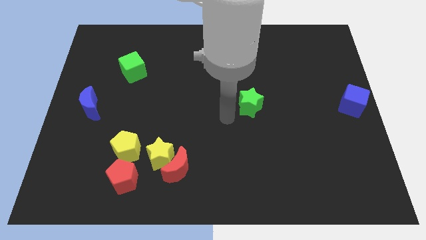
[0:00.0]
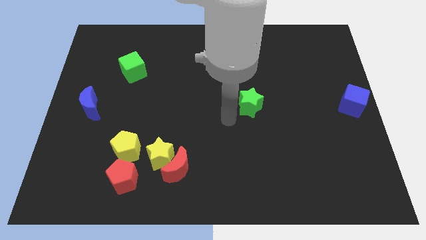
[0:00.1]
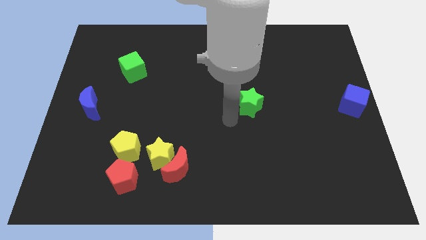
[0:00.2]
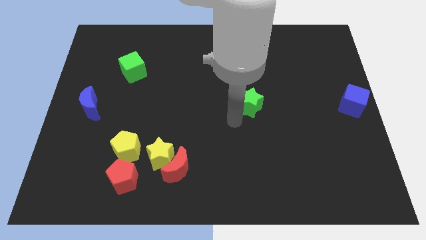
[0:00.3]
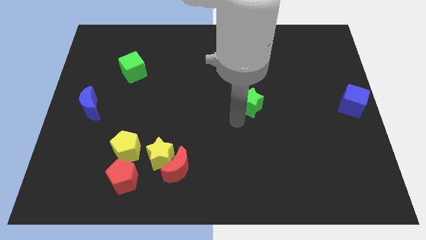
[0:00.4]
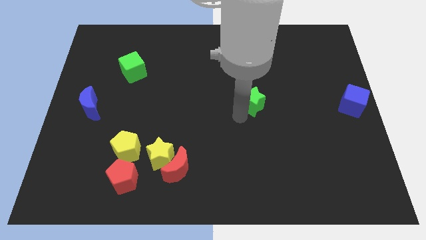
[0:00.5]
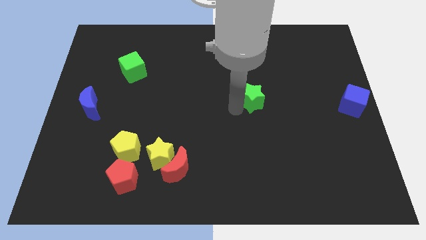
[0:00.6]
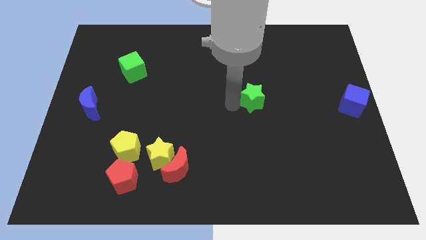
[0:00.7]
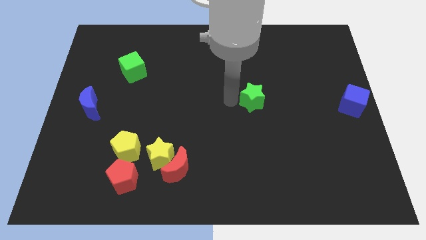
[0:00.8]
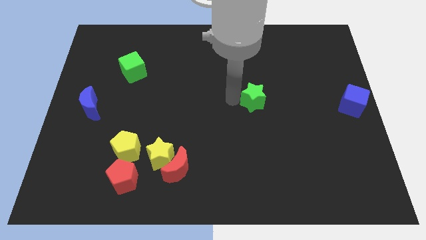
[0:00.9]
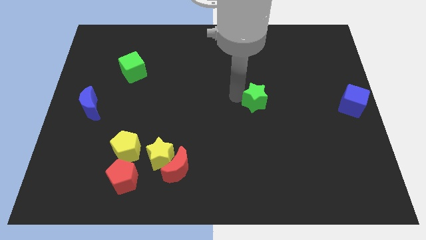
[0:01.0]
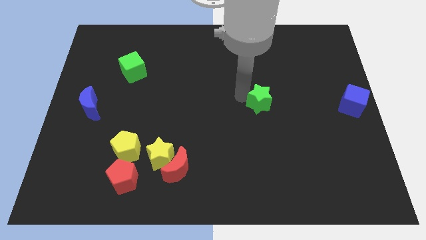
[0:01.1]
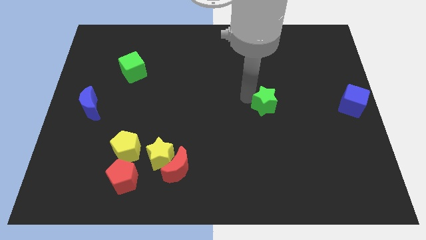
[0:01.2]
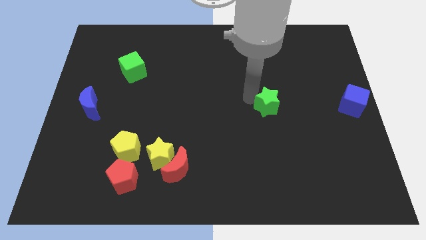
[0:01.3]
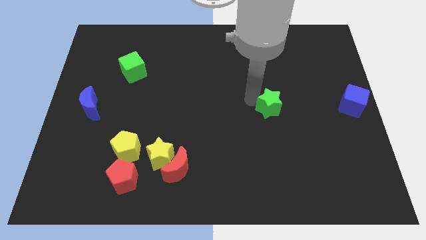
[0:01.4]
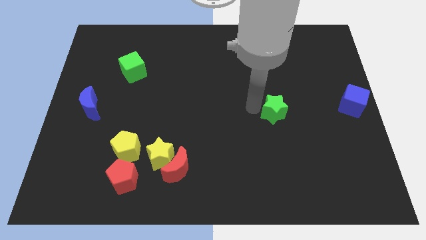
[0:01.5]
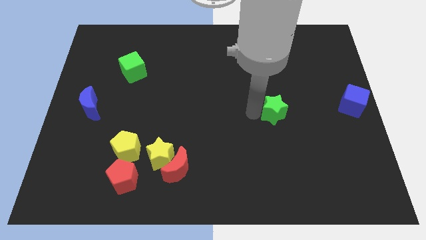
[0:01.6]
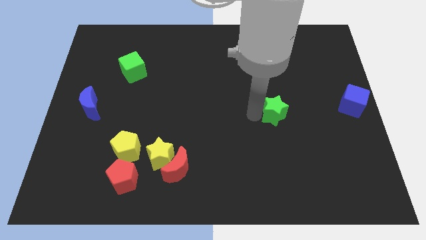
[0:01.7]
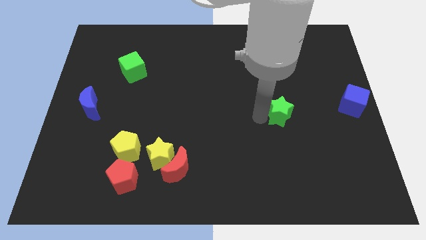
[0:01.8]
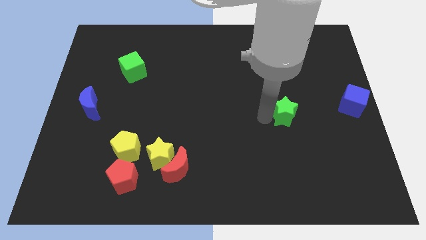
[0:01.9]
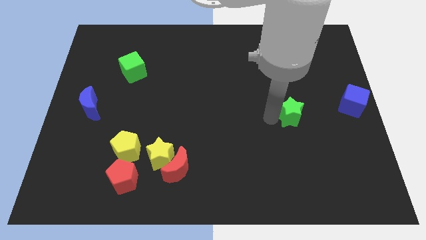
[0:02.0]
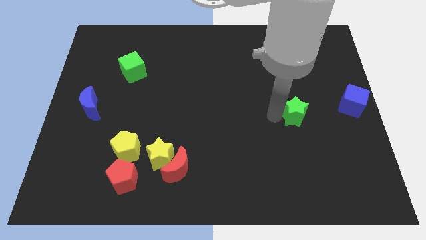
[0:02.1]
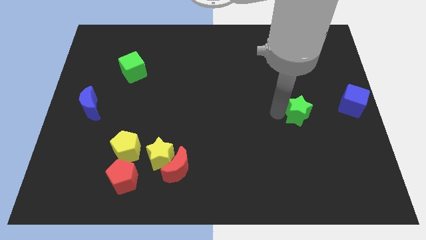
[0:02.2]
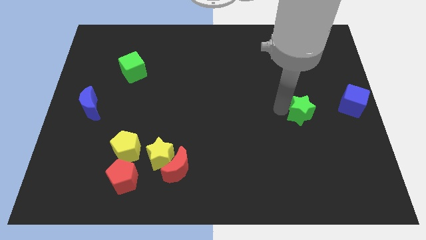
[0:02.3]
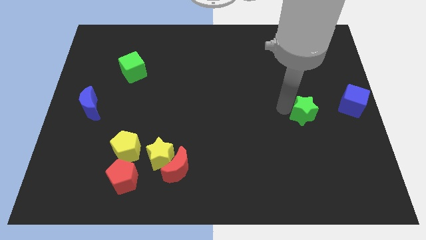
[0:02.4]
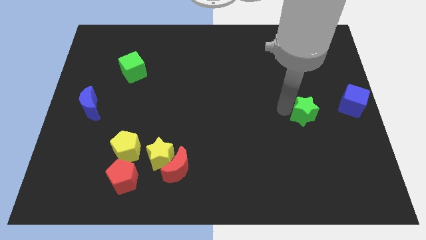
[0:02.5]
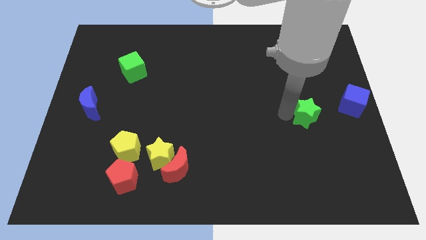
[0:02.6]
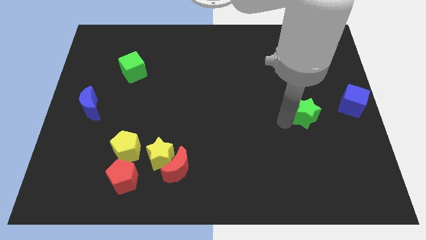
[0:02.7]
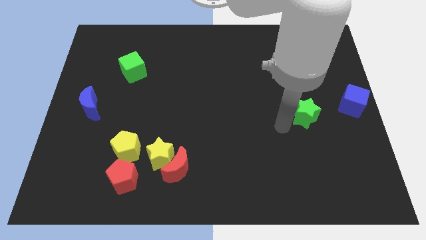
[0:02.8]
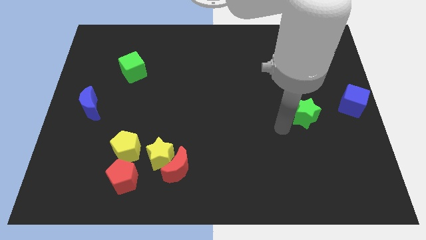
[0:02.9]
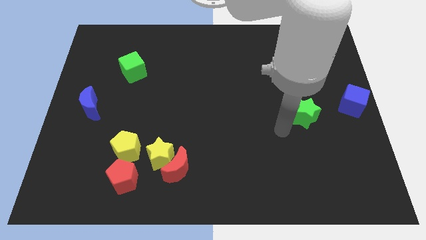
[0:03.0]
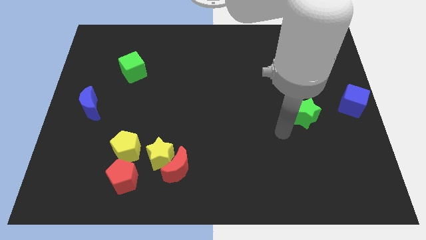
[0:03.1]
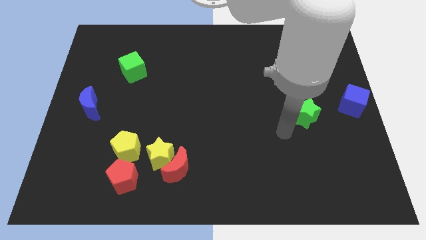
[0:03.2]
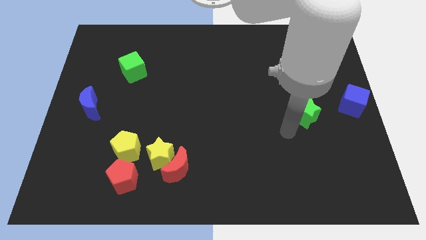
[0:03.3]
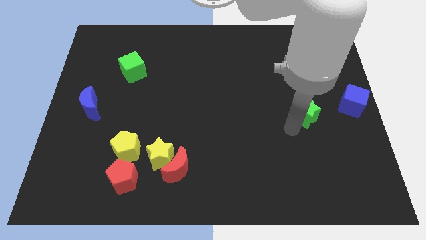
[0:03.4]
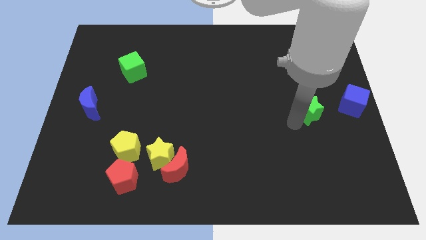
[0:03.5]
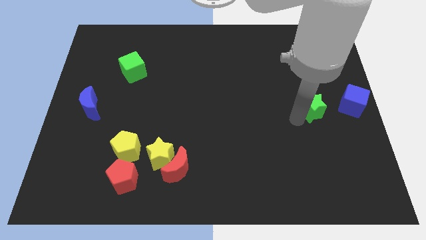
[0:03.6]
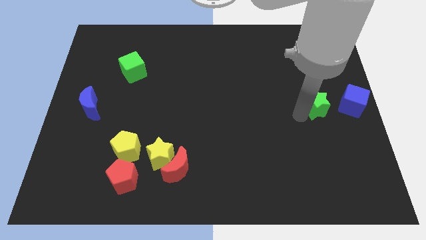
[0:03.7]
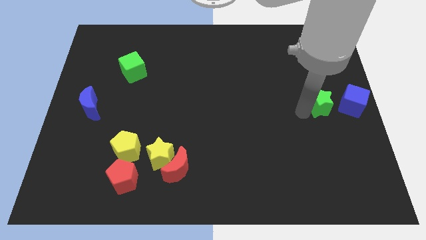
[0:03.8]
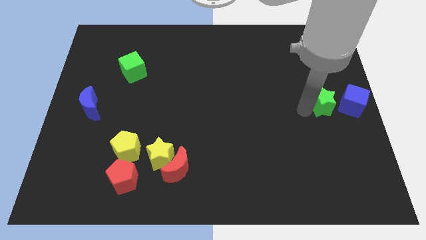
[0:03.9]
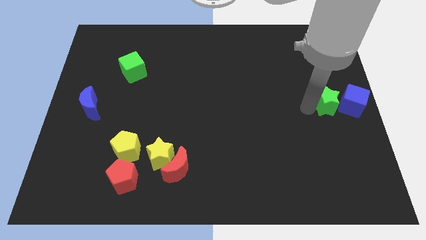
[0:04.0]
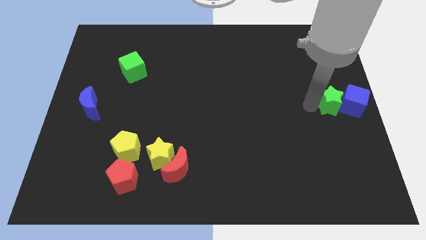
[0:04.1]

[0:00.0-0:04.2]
place the green star to the left of the blue cube

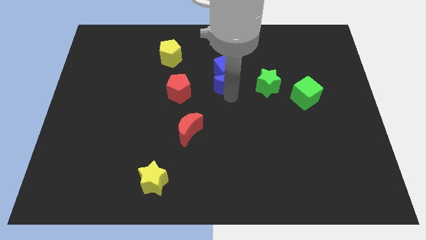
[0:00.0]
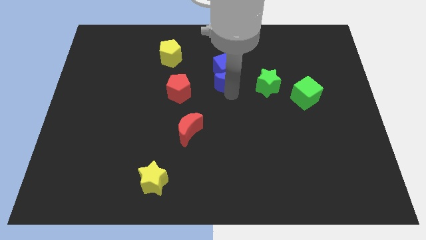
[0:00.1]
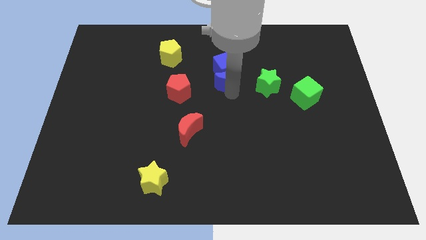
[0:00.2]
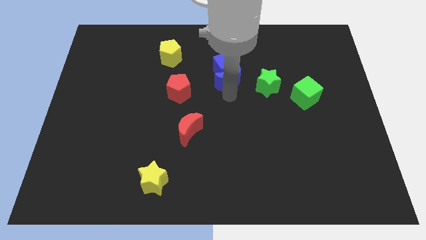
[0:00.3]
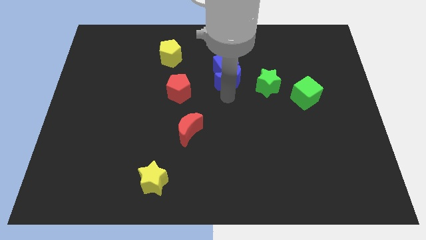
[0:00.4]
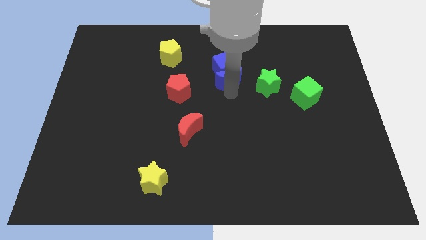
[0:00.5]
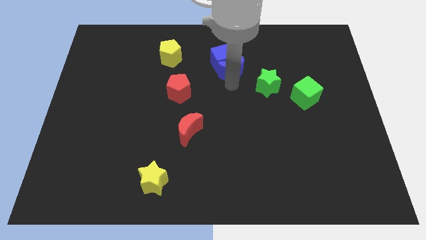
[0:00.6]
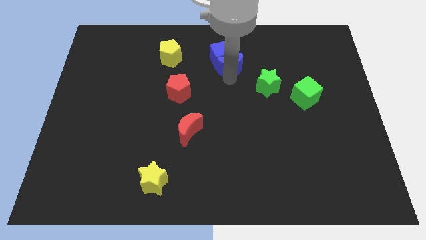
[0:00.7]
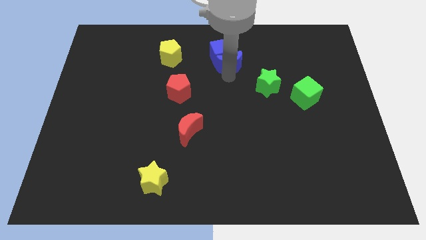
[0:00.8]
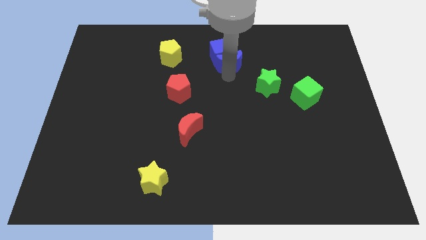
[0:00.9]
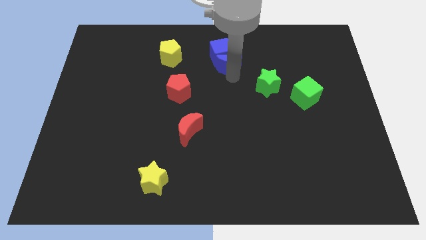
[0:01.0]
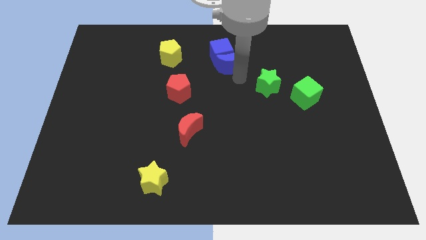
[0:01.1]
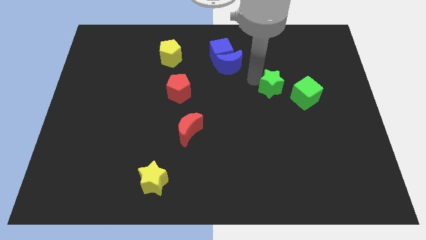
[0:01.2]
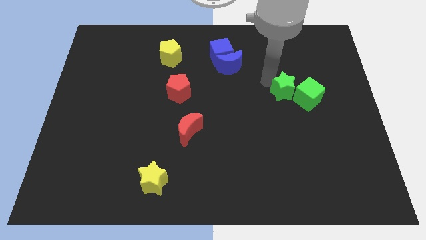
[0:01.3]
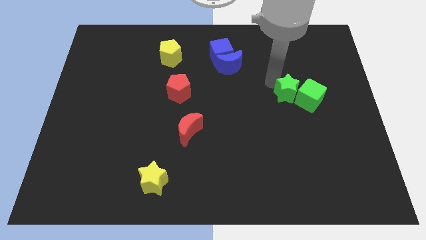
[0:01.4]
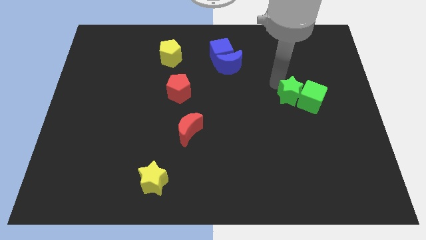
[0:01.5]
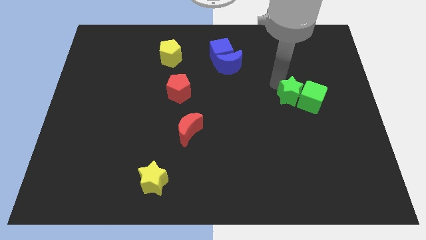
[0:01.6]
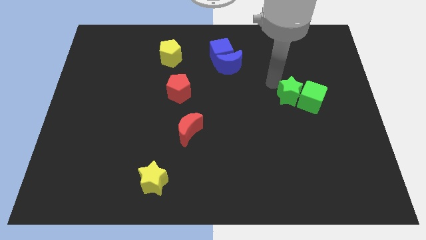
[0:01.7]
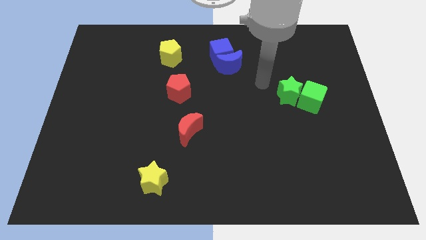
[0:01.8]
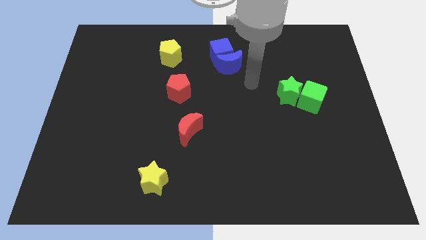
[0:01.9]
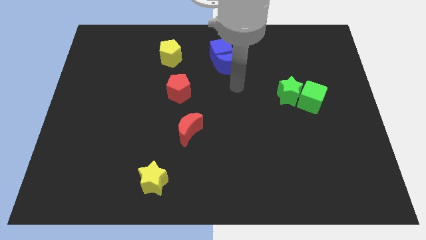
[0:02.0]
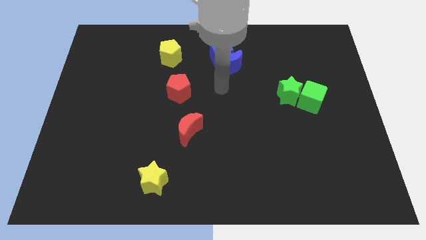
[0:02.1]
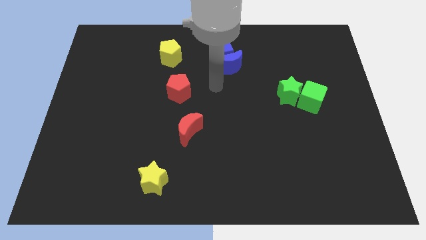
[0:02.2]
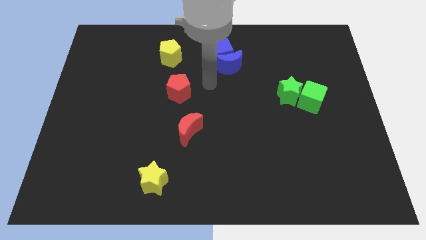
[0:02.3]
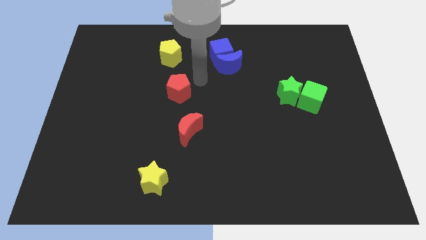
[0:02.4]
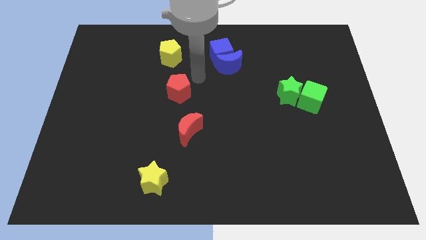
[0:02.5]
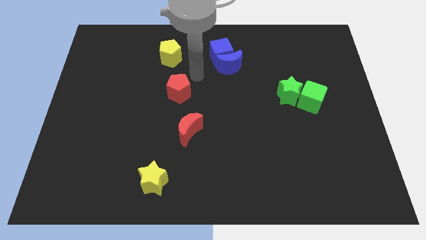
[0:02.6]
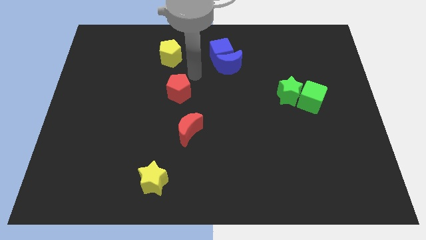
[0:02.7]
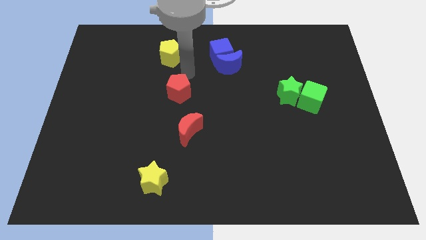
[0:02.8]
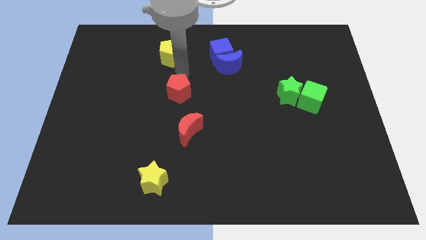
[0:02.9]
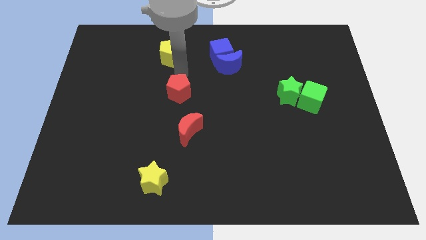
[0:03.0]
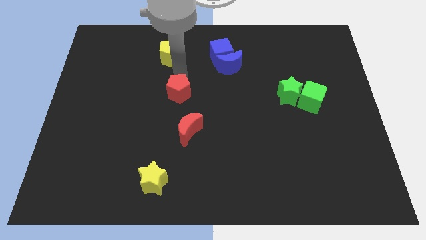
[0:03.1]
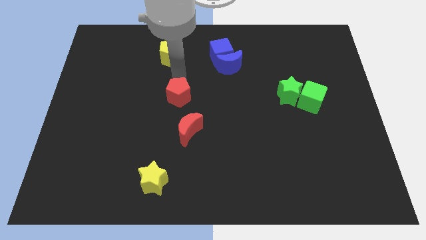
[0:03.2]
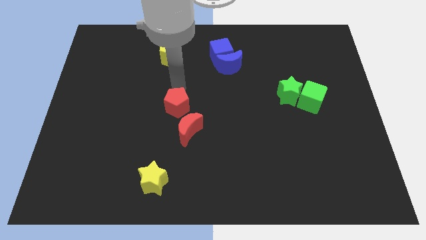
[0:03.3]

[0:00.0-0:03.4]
push the green star into the green cube

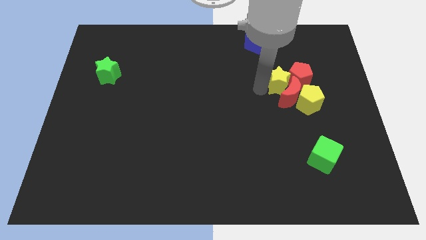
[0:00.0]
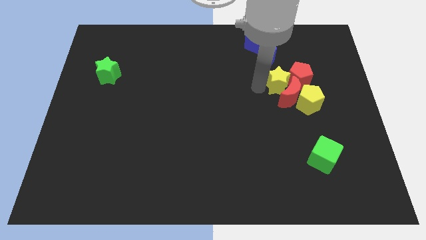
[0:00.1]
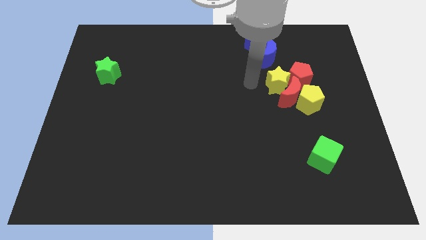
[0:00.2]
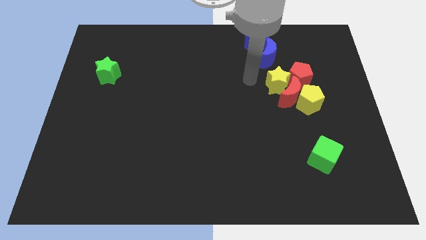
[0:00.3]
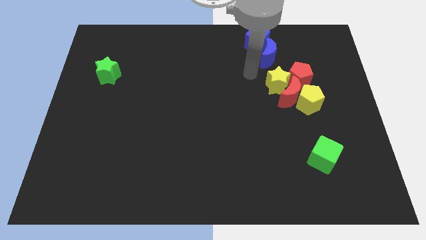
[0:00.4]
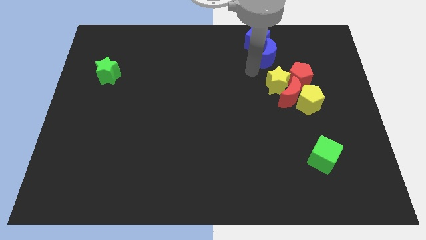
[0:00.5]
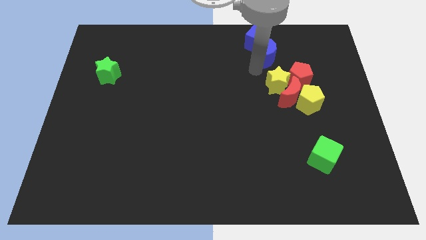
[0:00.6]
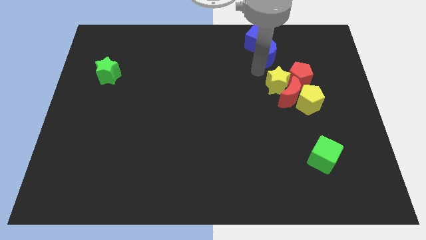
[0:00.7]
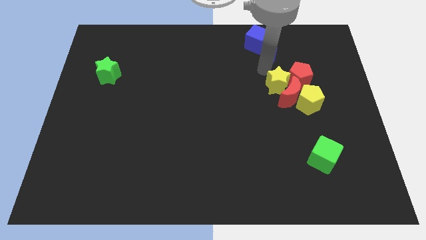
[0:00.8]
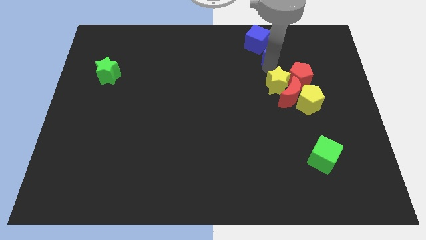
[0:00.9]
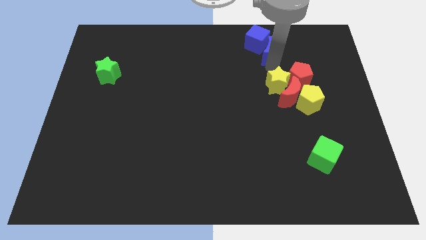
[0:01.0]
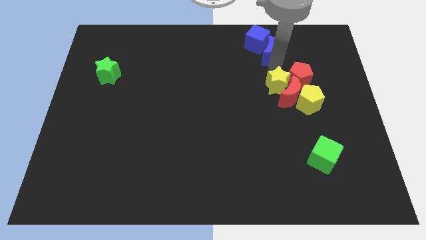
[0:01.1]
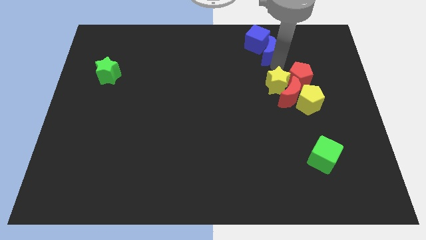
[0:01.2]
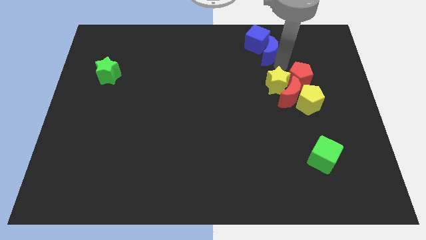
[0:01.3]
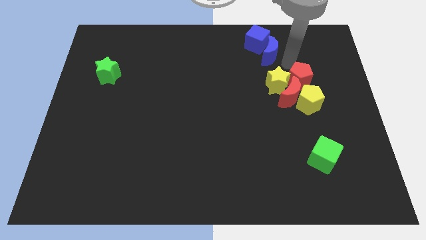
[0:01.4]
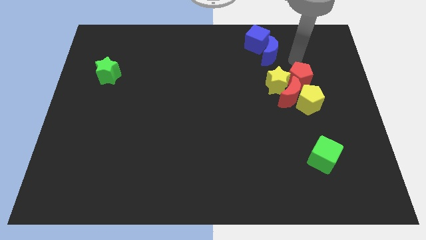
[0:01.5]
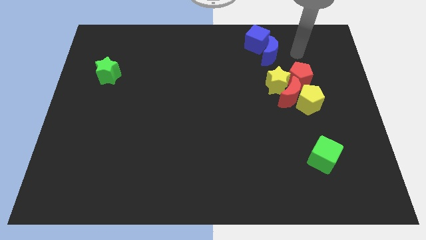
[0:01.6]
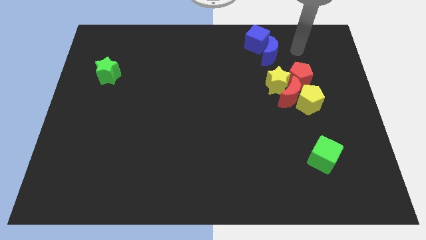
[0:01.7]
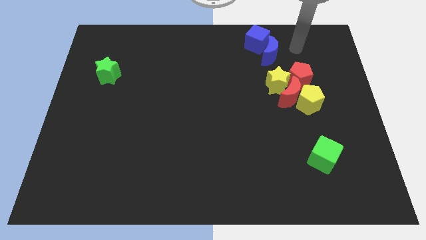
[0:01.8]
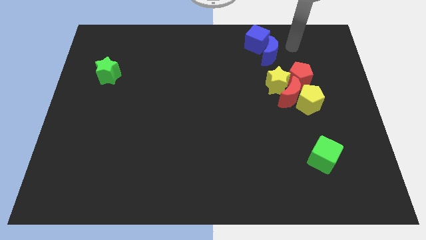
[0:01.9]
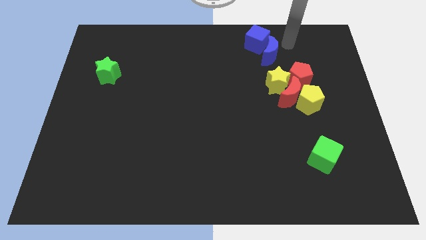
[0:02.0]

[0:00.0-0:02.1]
move slightly yellow pentagon
